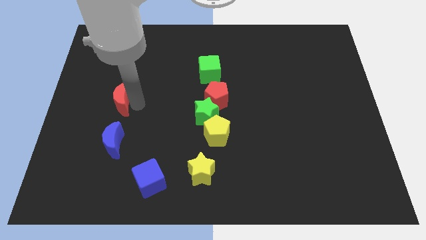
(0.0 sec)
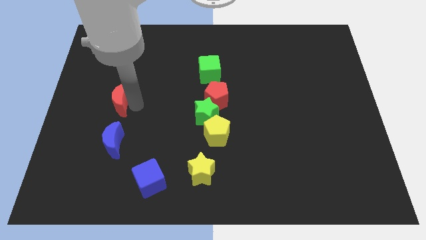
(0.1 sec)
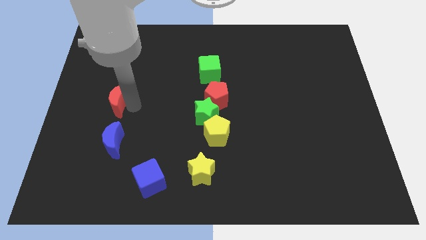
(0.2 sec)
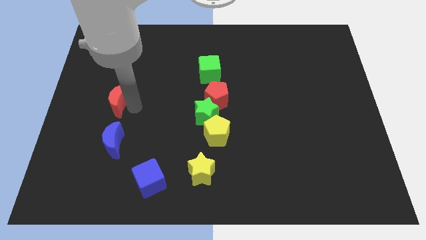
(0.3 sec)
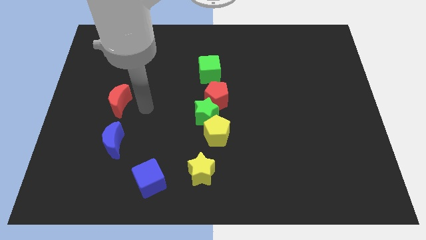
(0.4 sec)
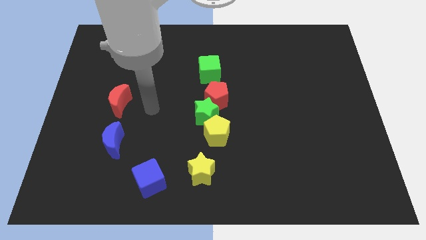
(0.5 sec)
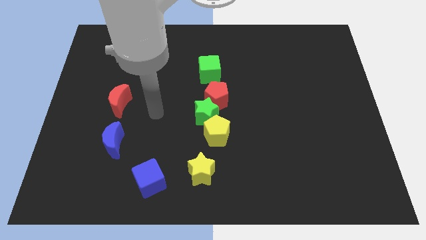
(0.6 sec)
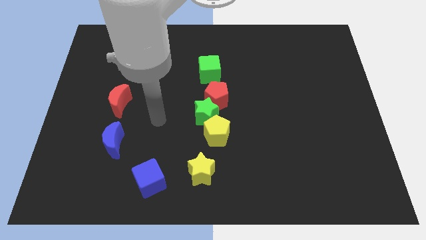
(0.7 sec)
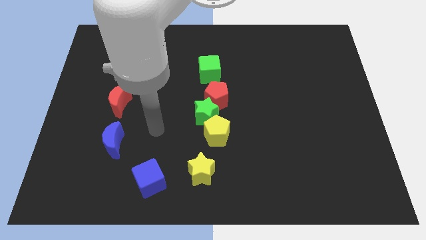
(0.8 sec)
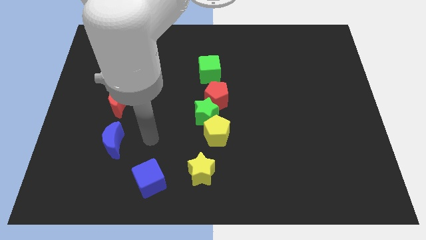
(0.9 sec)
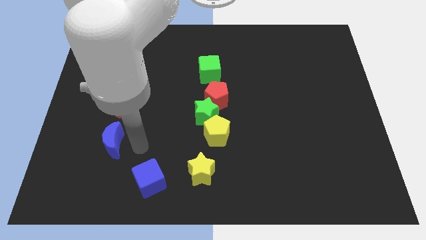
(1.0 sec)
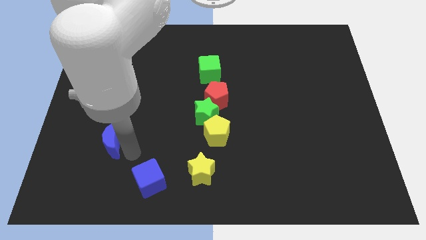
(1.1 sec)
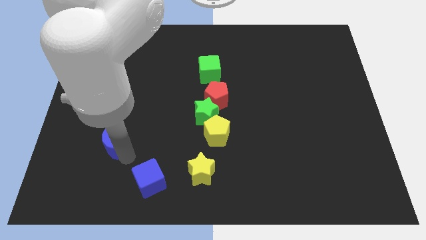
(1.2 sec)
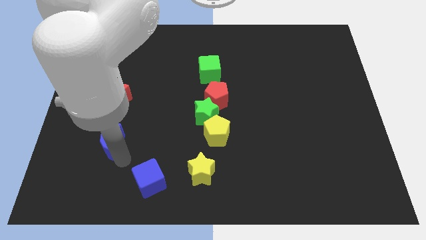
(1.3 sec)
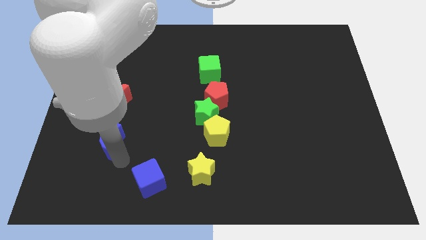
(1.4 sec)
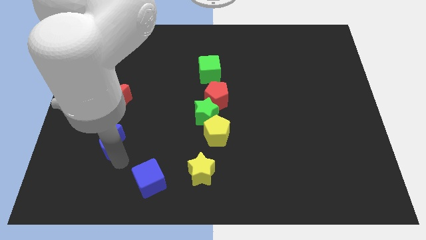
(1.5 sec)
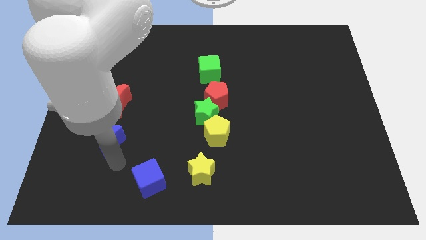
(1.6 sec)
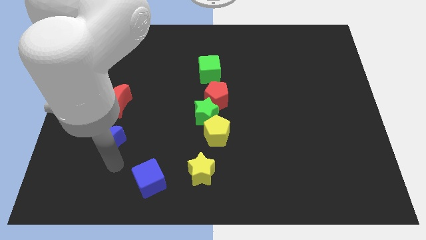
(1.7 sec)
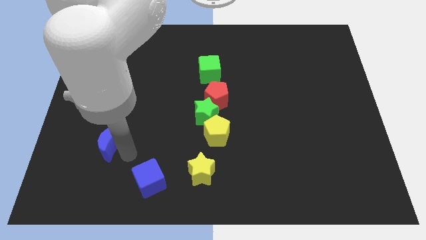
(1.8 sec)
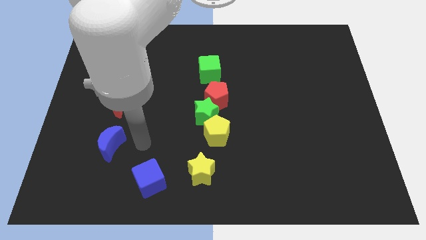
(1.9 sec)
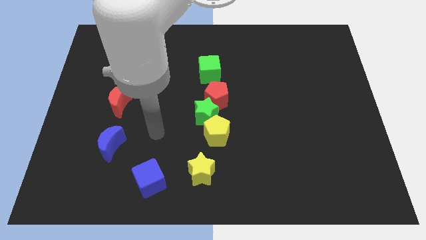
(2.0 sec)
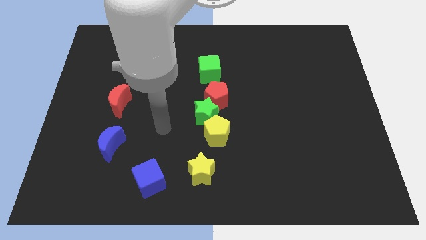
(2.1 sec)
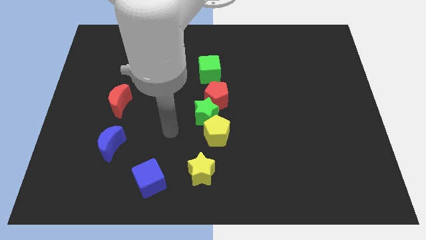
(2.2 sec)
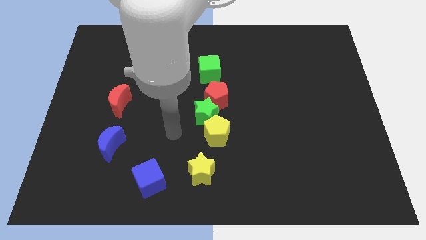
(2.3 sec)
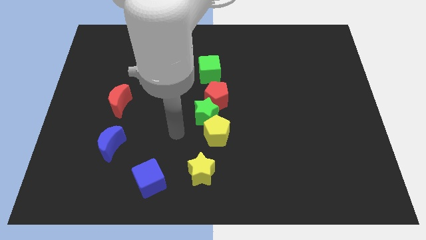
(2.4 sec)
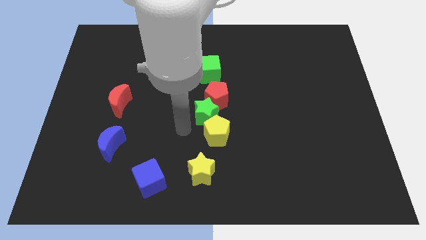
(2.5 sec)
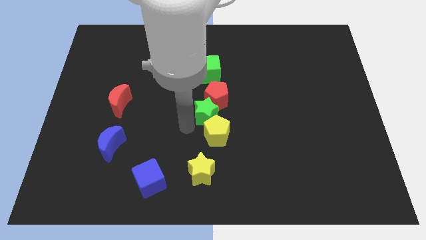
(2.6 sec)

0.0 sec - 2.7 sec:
adjust the red moon and blue moon slightly

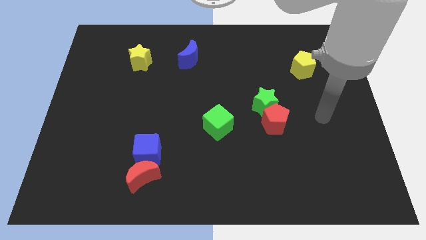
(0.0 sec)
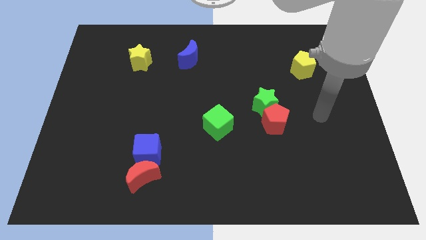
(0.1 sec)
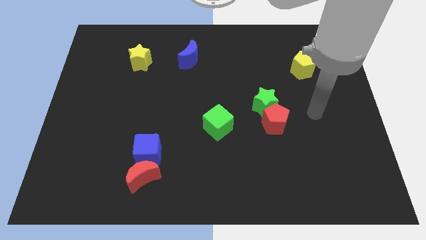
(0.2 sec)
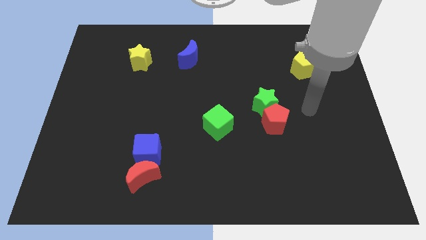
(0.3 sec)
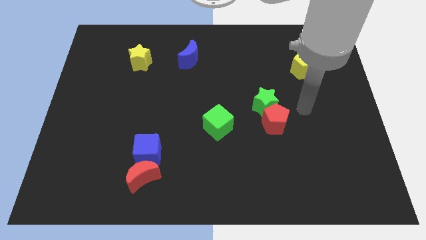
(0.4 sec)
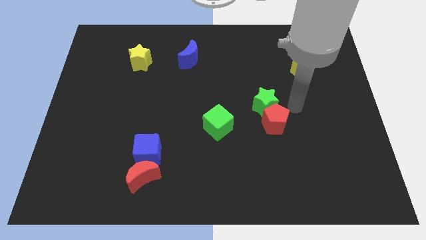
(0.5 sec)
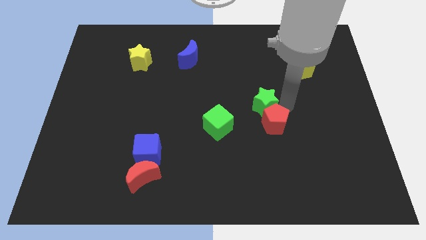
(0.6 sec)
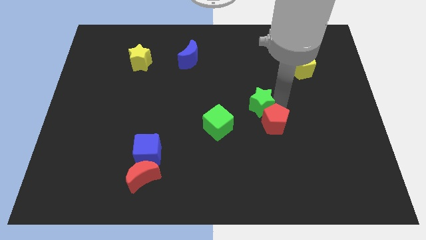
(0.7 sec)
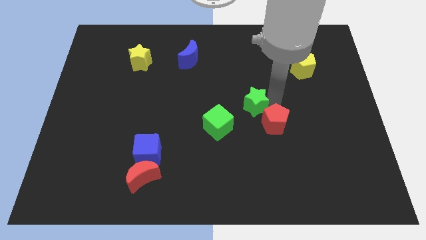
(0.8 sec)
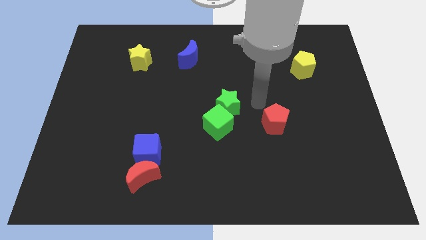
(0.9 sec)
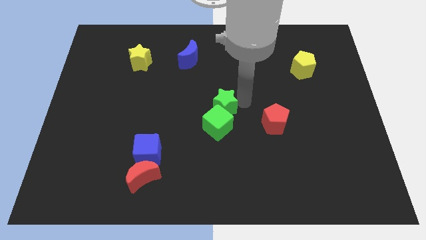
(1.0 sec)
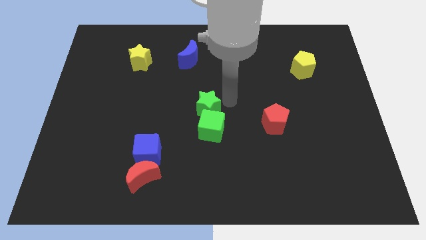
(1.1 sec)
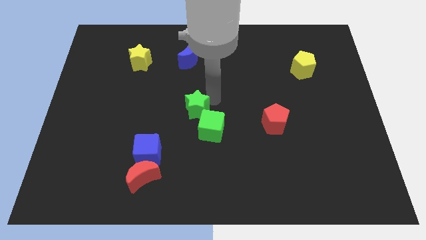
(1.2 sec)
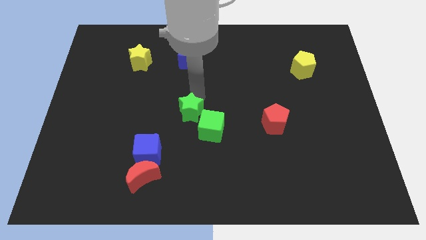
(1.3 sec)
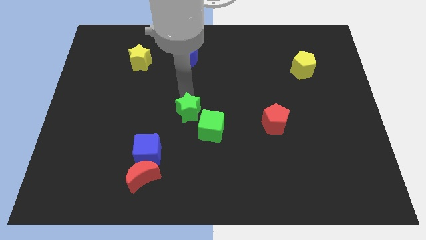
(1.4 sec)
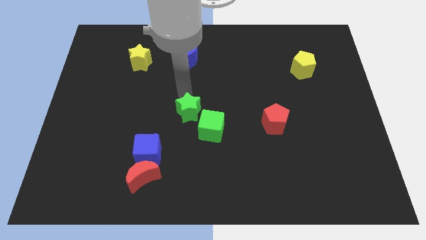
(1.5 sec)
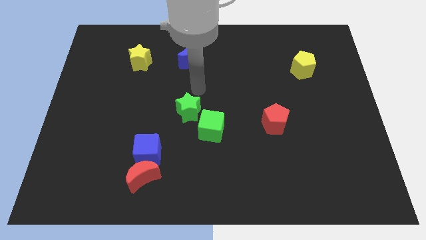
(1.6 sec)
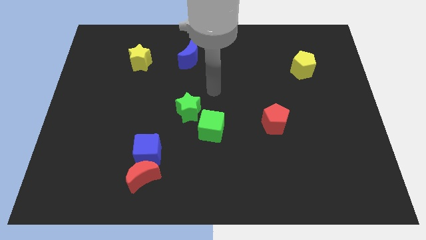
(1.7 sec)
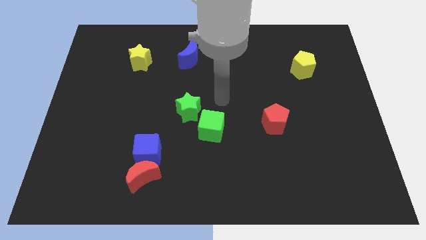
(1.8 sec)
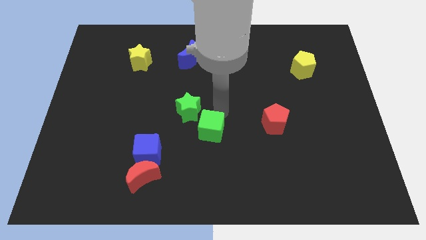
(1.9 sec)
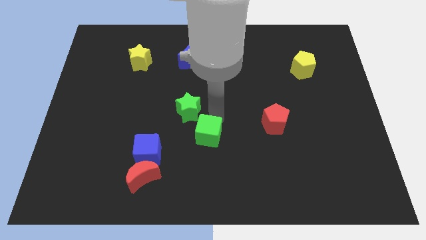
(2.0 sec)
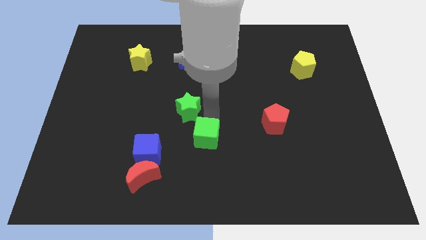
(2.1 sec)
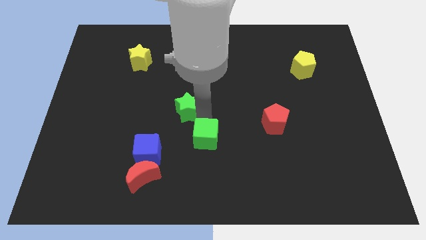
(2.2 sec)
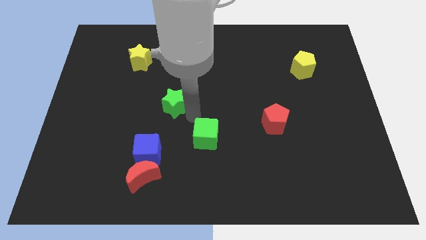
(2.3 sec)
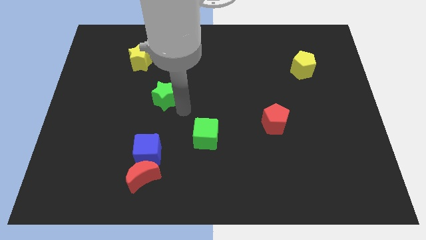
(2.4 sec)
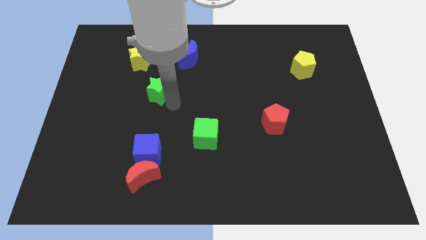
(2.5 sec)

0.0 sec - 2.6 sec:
place the green star above the blue cube

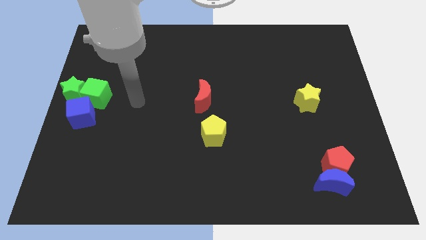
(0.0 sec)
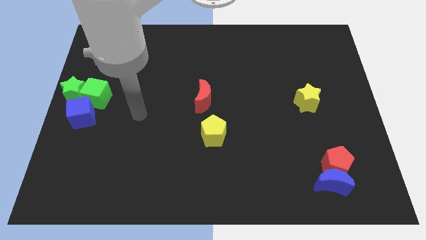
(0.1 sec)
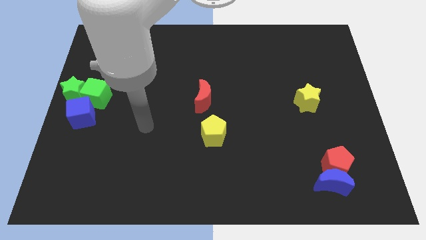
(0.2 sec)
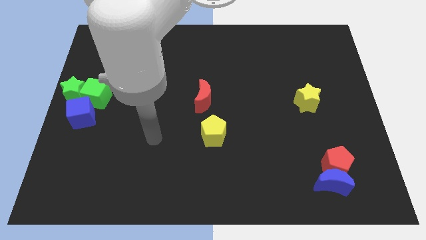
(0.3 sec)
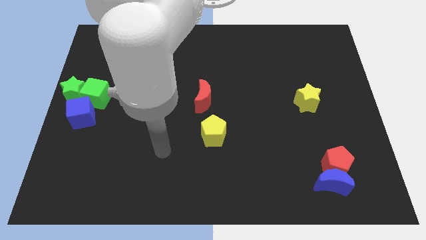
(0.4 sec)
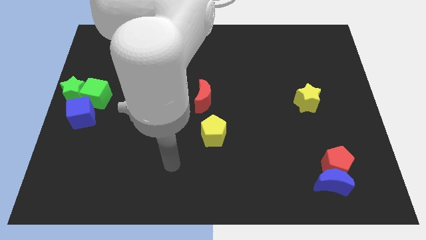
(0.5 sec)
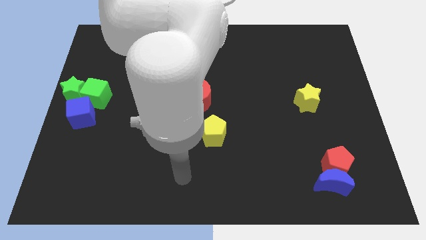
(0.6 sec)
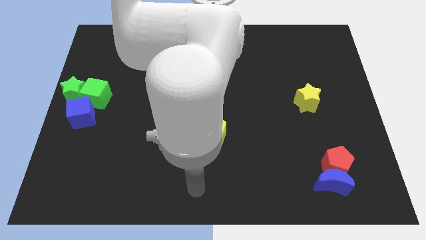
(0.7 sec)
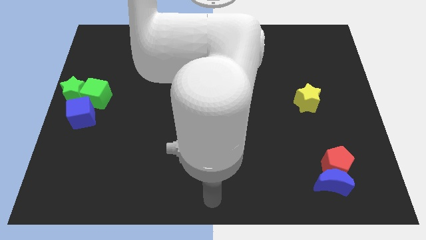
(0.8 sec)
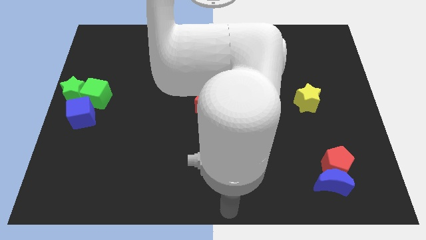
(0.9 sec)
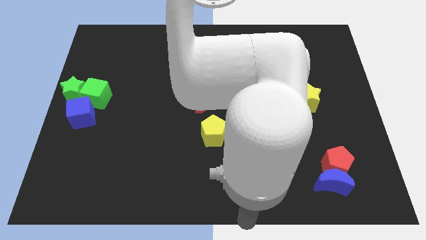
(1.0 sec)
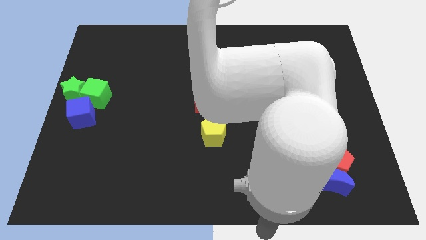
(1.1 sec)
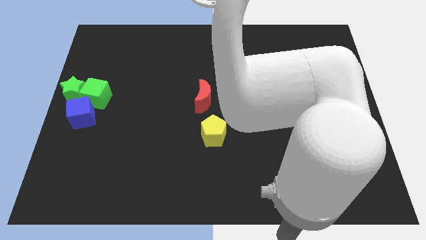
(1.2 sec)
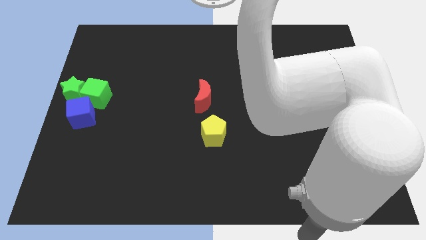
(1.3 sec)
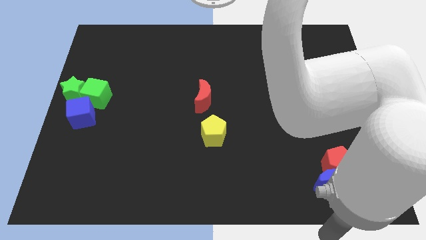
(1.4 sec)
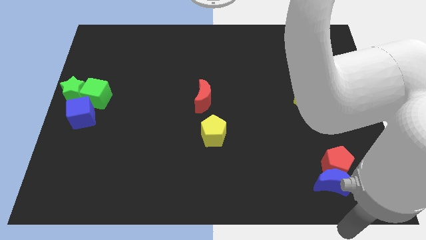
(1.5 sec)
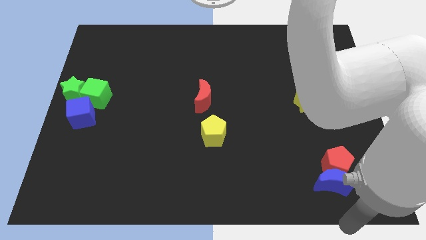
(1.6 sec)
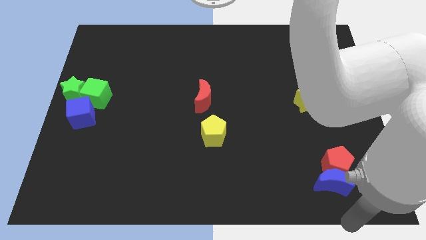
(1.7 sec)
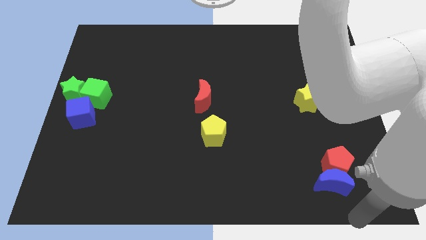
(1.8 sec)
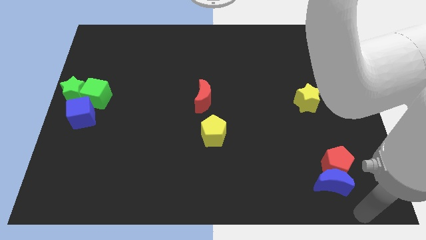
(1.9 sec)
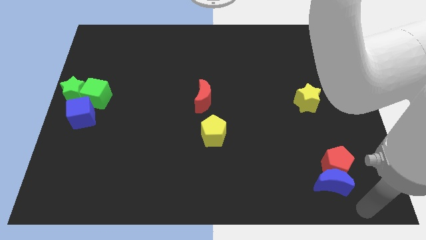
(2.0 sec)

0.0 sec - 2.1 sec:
move the arm towards the blue crescent

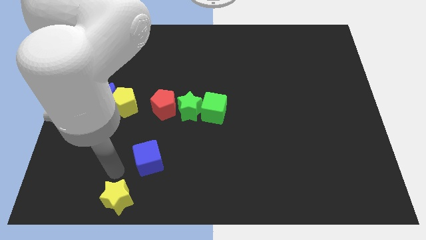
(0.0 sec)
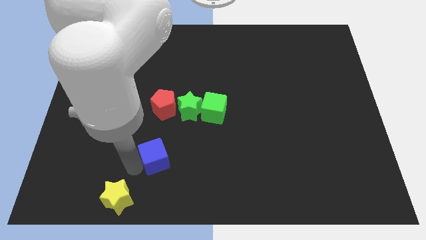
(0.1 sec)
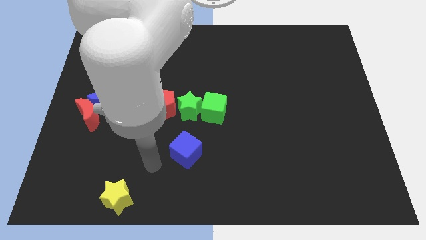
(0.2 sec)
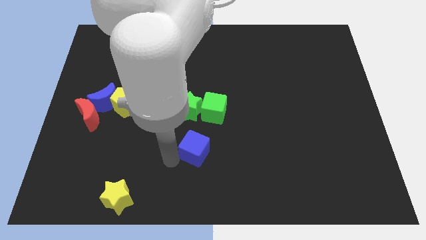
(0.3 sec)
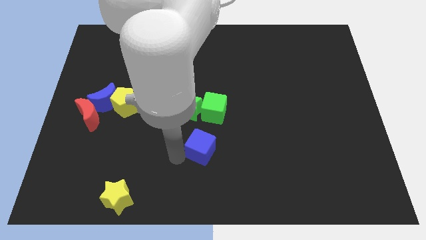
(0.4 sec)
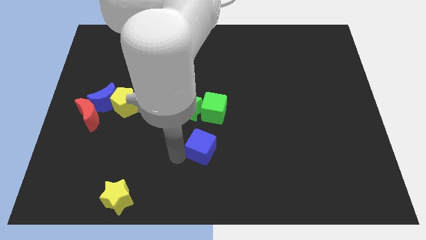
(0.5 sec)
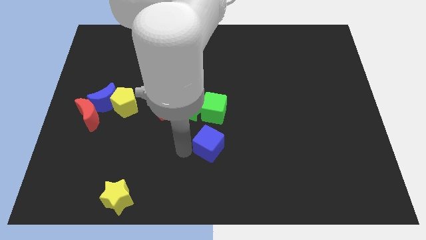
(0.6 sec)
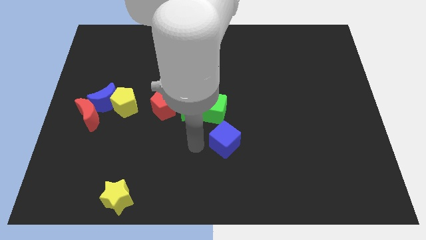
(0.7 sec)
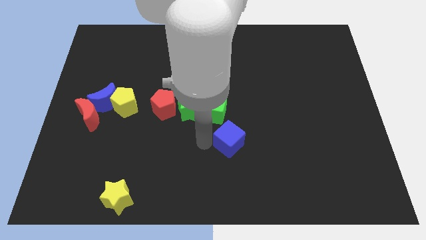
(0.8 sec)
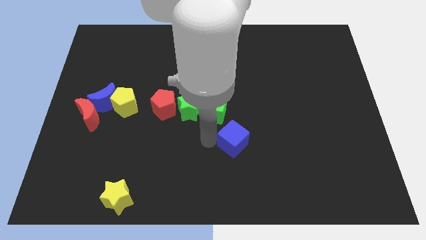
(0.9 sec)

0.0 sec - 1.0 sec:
place the blue cube diagonally bottom right to the green cube

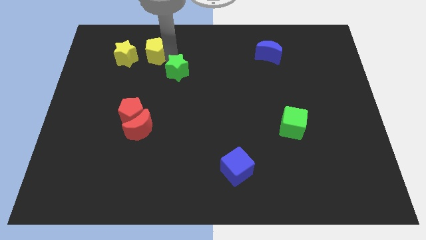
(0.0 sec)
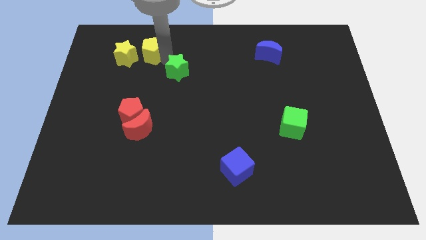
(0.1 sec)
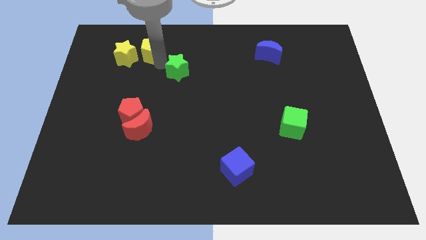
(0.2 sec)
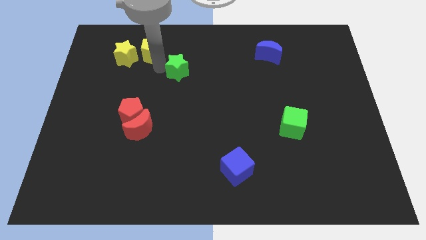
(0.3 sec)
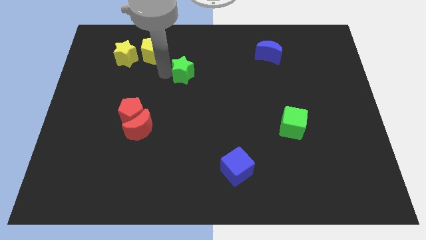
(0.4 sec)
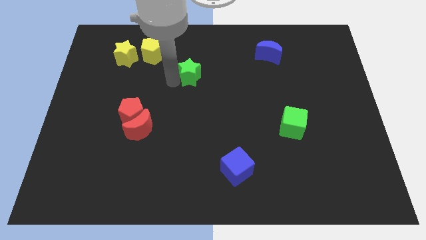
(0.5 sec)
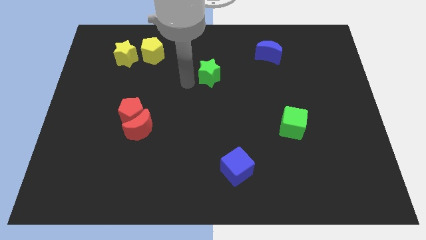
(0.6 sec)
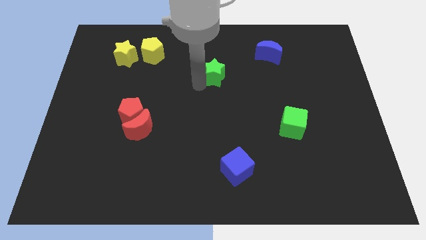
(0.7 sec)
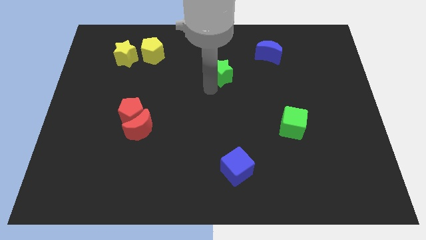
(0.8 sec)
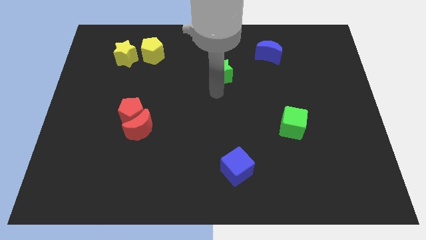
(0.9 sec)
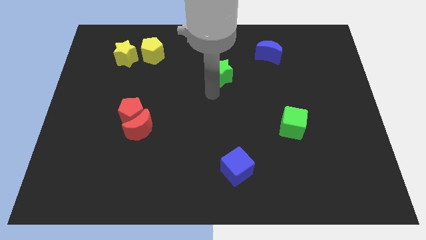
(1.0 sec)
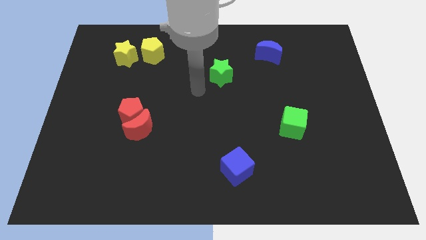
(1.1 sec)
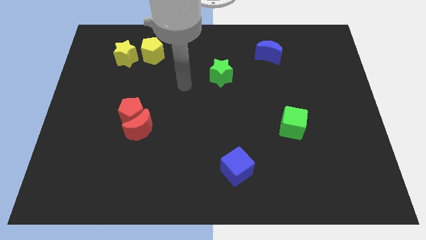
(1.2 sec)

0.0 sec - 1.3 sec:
put the green star diagonal to the group of blocks
